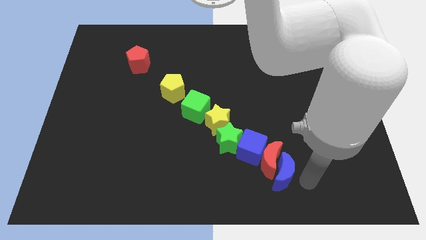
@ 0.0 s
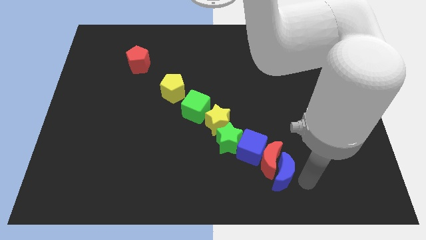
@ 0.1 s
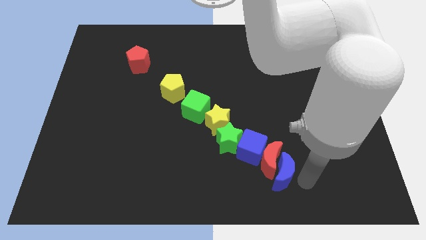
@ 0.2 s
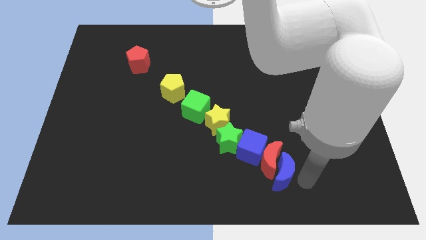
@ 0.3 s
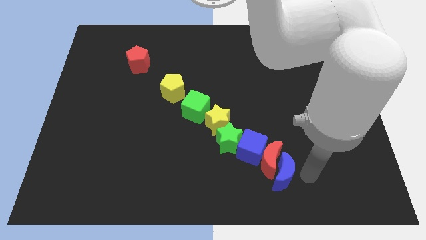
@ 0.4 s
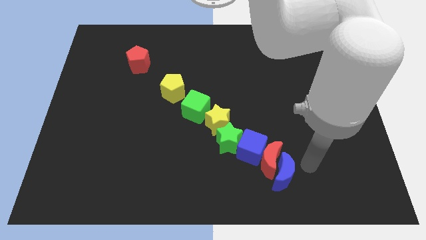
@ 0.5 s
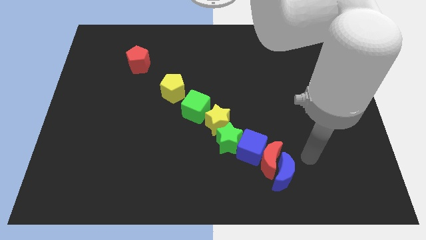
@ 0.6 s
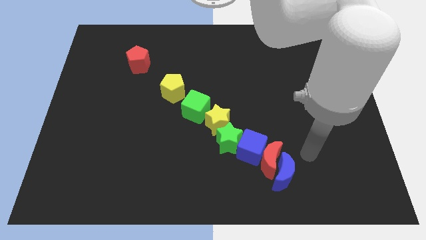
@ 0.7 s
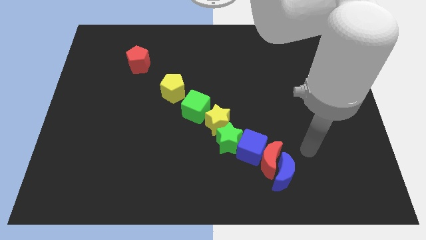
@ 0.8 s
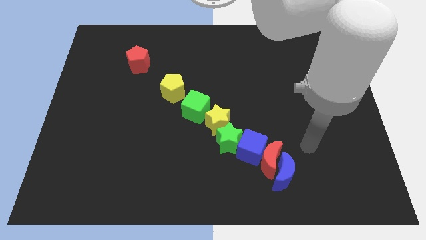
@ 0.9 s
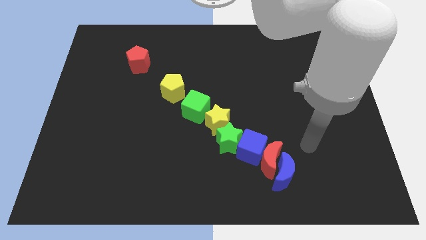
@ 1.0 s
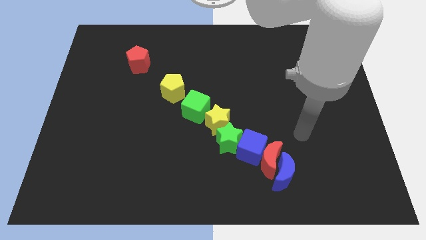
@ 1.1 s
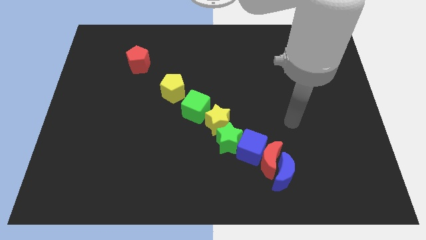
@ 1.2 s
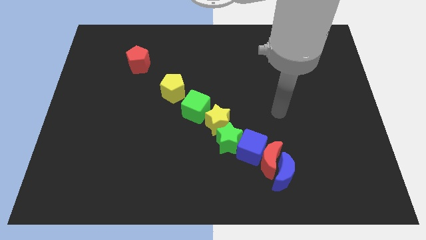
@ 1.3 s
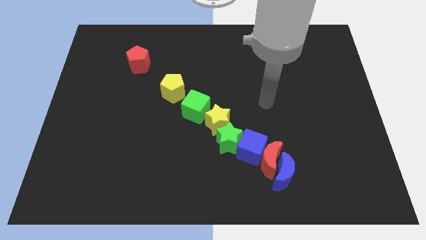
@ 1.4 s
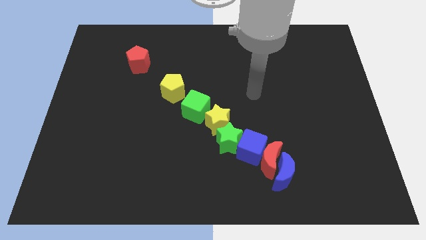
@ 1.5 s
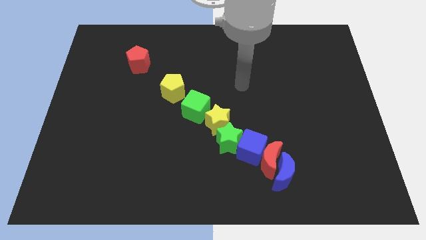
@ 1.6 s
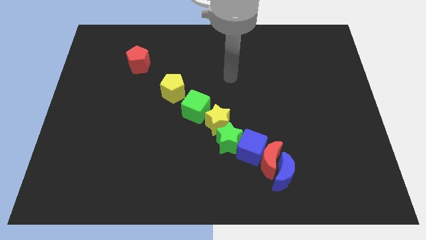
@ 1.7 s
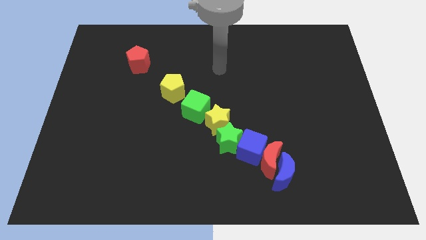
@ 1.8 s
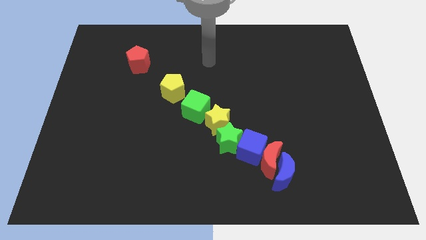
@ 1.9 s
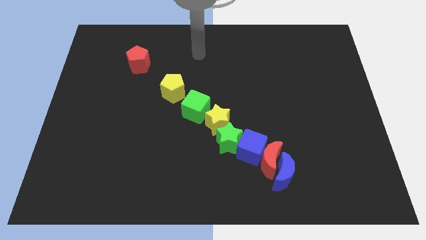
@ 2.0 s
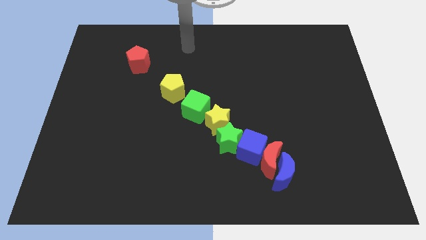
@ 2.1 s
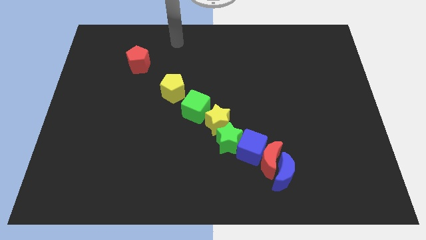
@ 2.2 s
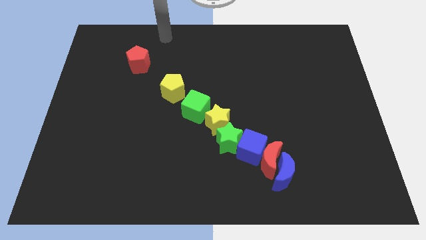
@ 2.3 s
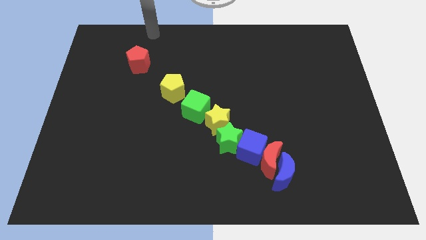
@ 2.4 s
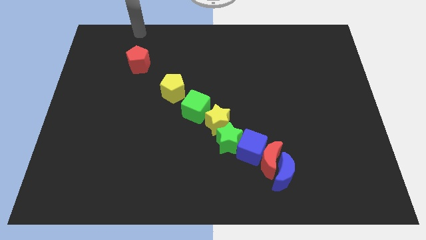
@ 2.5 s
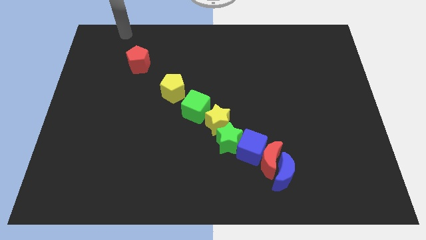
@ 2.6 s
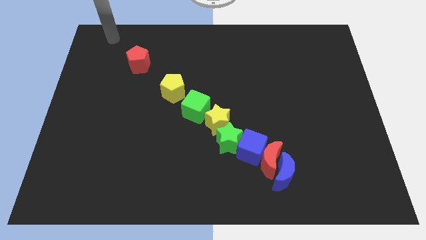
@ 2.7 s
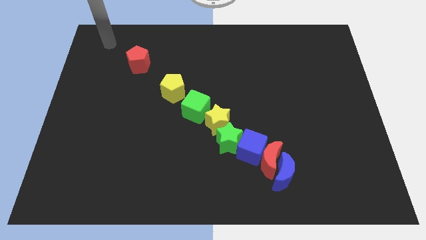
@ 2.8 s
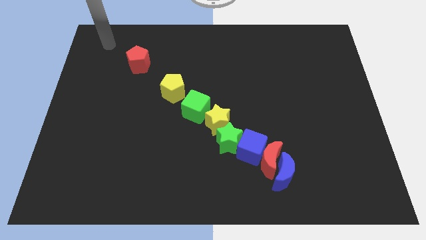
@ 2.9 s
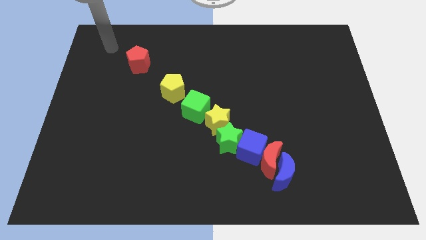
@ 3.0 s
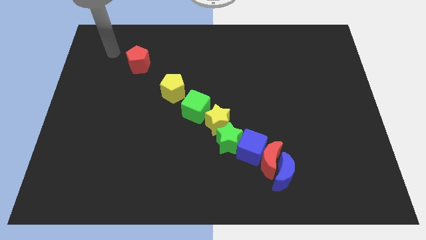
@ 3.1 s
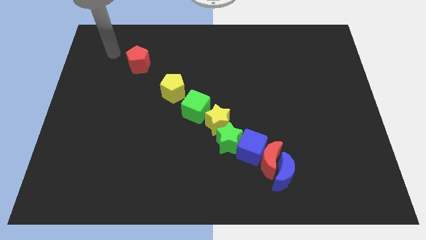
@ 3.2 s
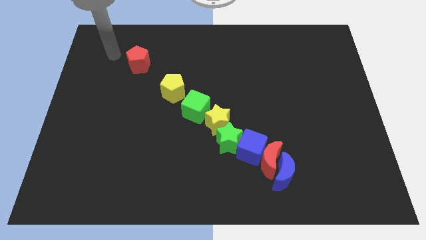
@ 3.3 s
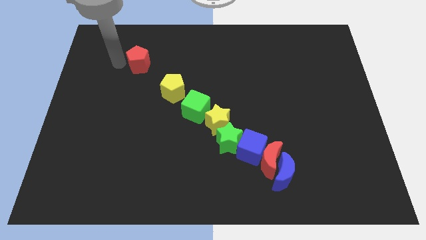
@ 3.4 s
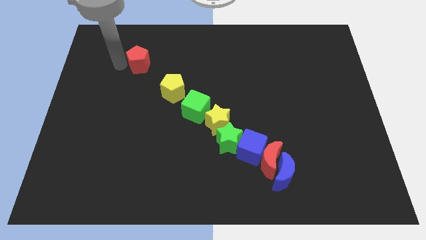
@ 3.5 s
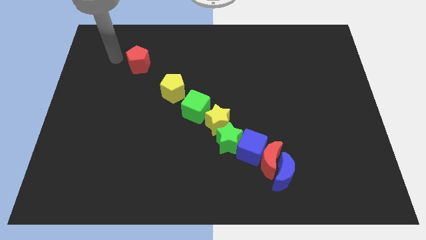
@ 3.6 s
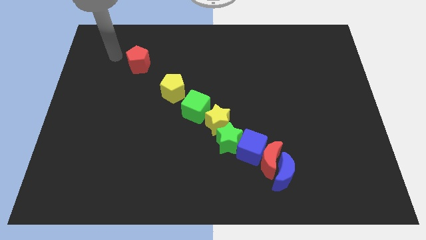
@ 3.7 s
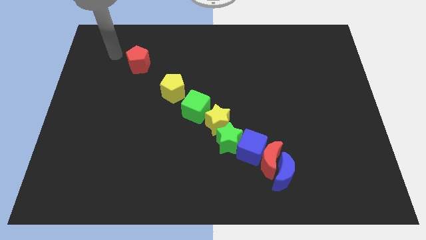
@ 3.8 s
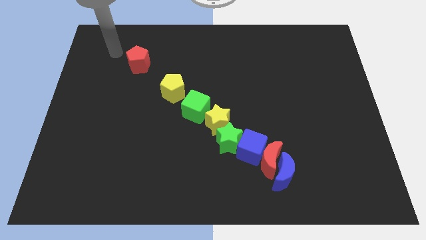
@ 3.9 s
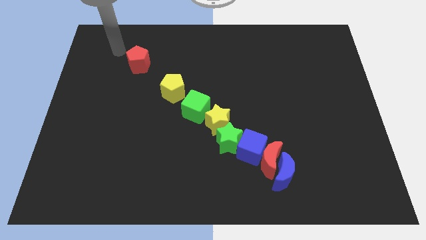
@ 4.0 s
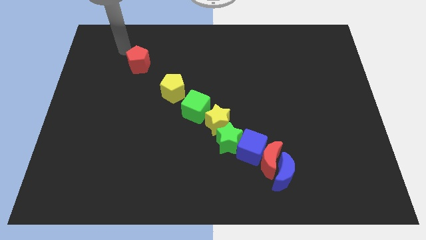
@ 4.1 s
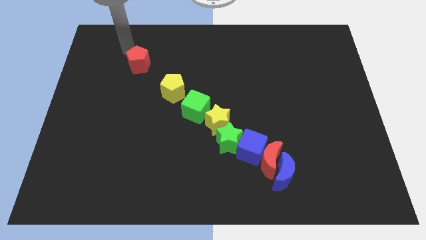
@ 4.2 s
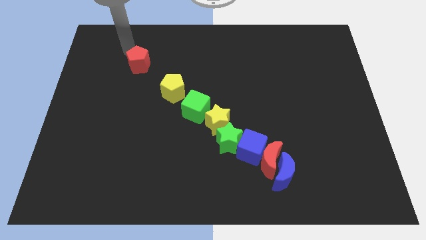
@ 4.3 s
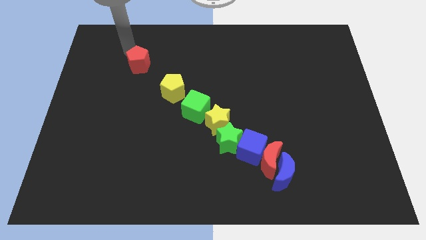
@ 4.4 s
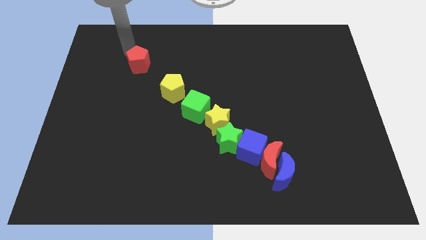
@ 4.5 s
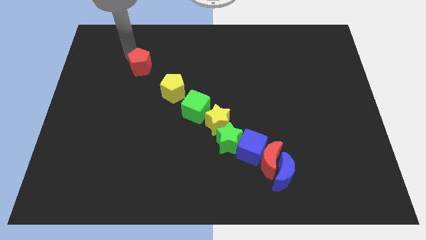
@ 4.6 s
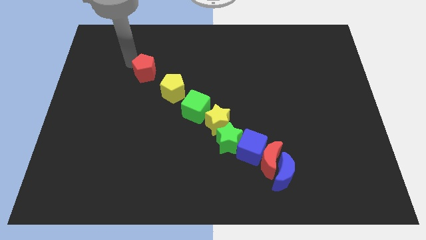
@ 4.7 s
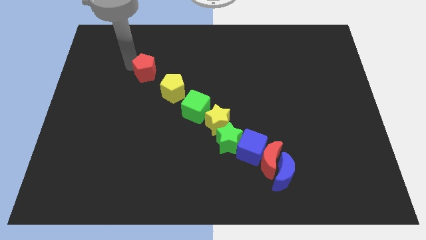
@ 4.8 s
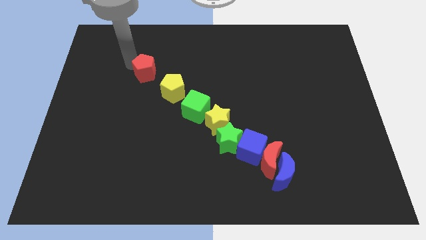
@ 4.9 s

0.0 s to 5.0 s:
move the arm towards the red pentagon

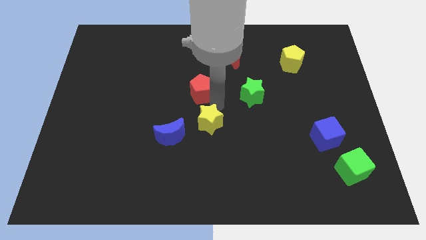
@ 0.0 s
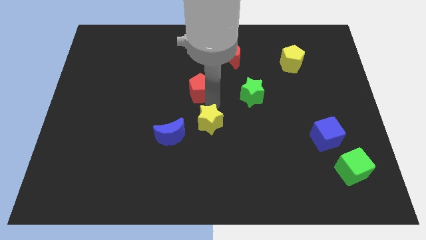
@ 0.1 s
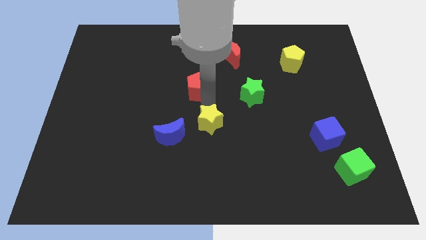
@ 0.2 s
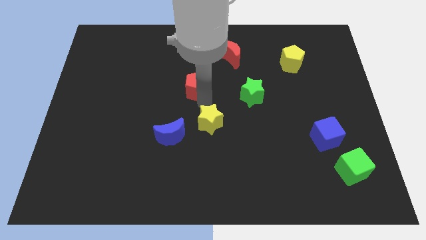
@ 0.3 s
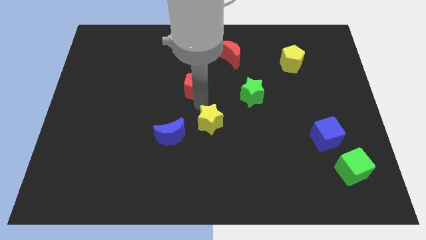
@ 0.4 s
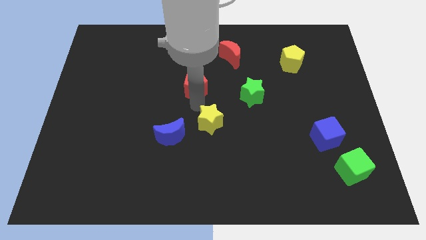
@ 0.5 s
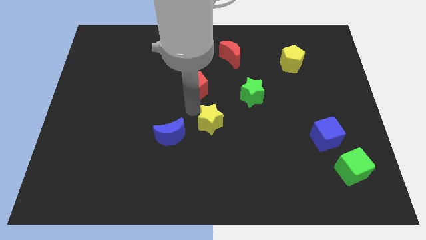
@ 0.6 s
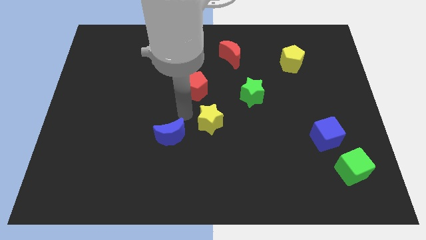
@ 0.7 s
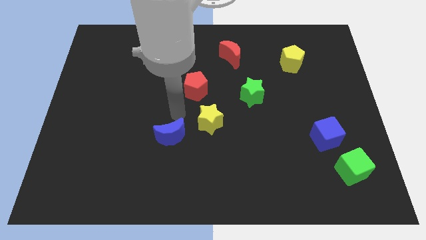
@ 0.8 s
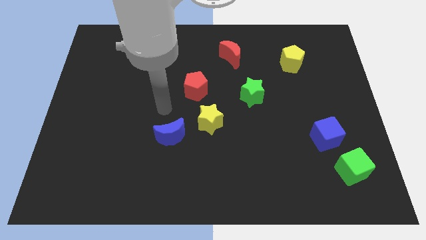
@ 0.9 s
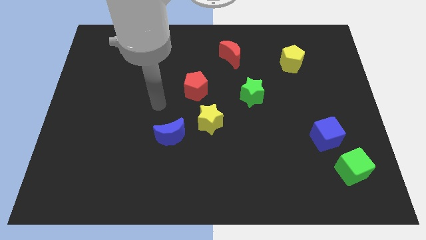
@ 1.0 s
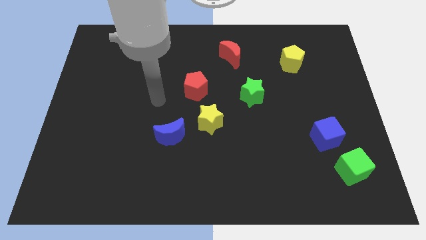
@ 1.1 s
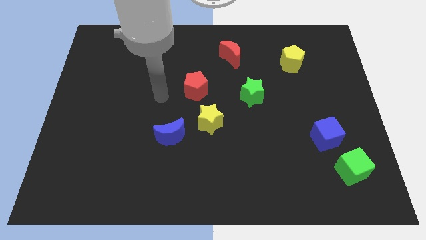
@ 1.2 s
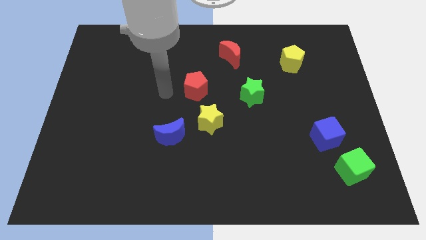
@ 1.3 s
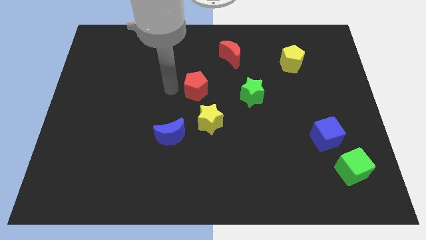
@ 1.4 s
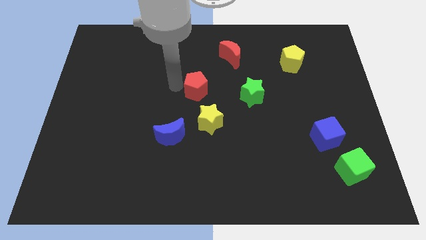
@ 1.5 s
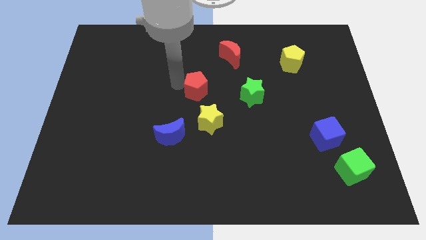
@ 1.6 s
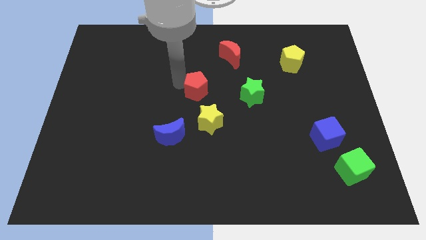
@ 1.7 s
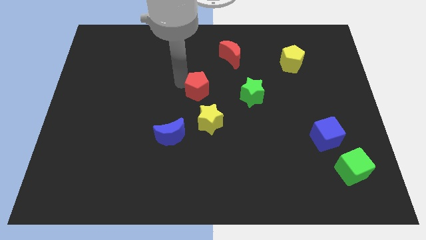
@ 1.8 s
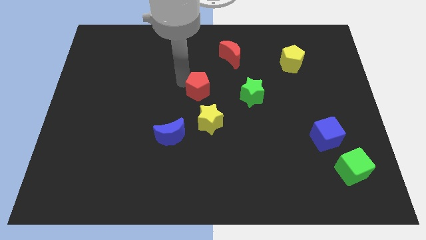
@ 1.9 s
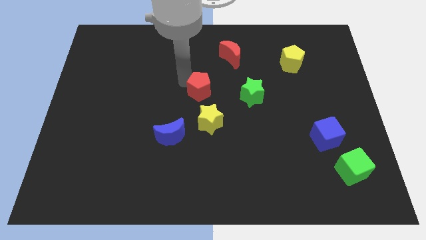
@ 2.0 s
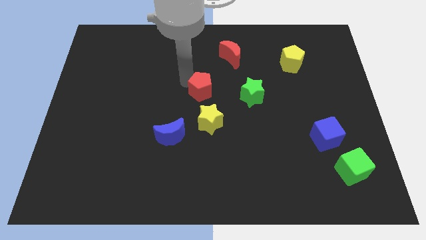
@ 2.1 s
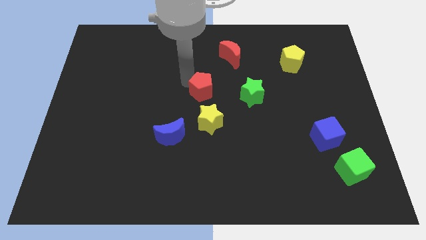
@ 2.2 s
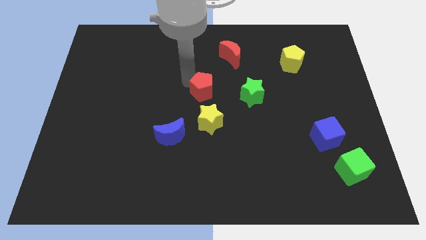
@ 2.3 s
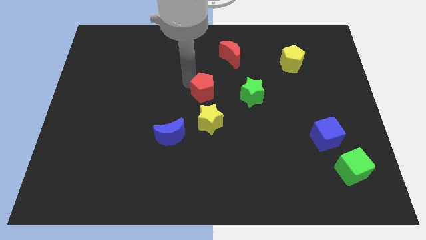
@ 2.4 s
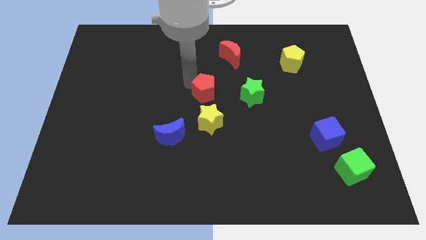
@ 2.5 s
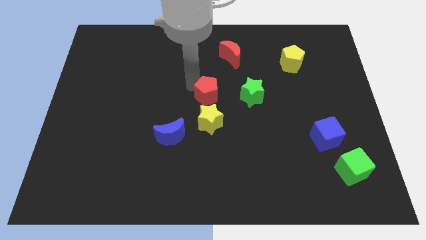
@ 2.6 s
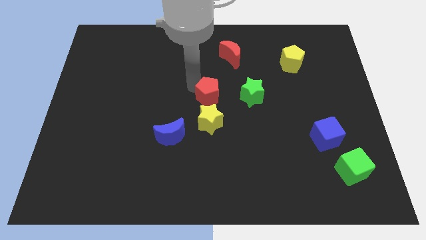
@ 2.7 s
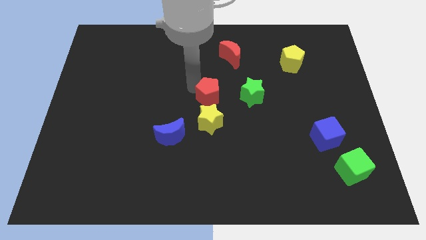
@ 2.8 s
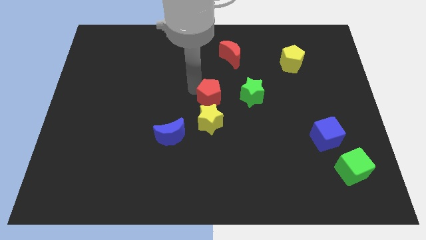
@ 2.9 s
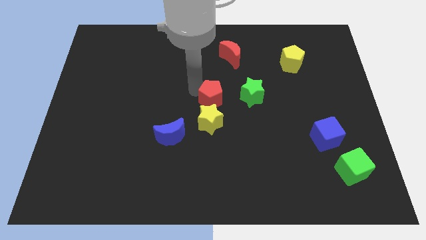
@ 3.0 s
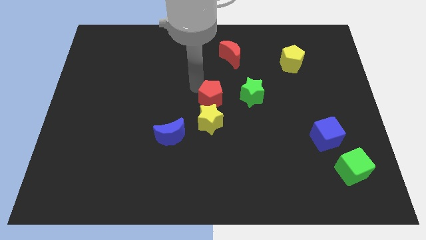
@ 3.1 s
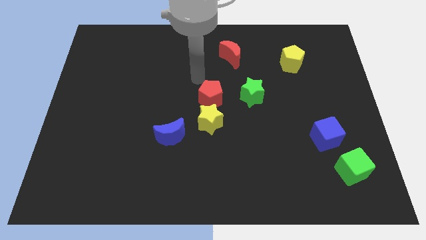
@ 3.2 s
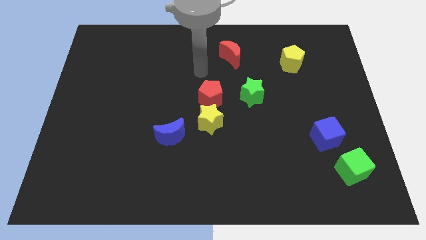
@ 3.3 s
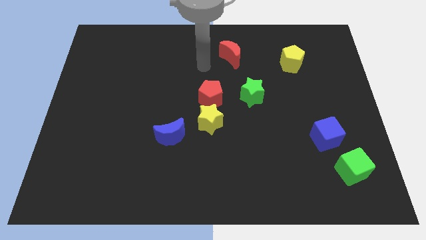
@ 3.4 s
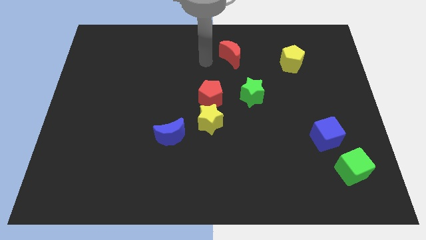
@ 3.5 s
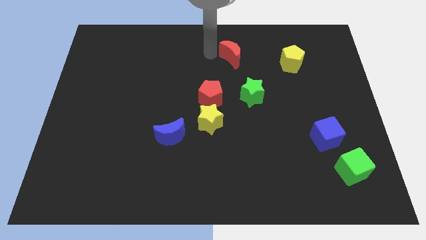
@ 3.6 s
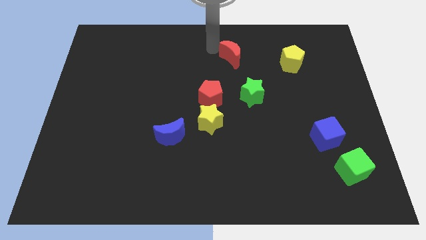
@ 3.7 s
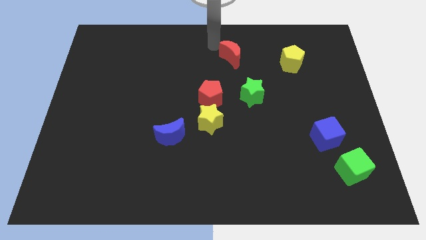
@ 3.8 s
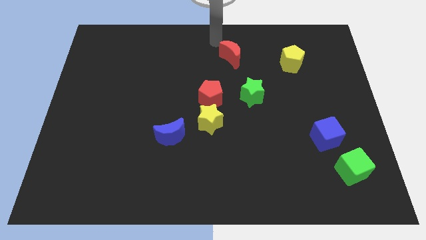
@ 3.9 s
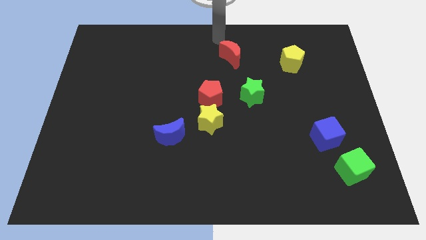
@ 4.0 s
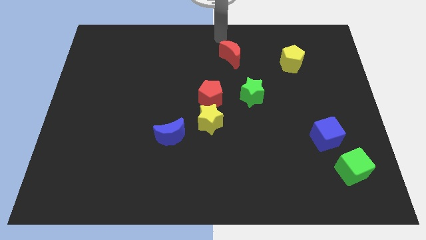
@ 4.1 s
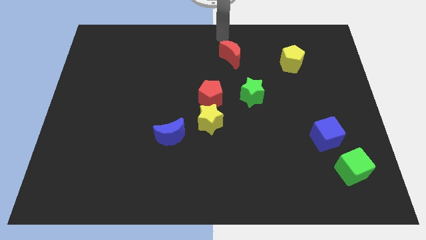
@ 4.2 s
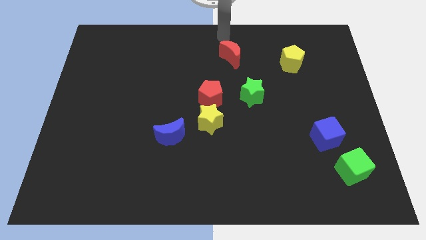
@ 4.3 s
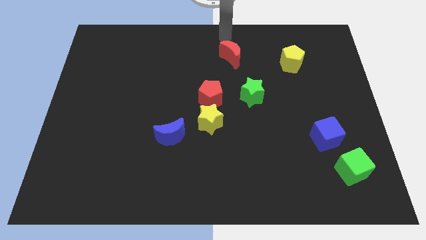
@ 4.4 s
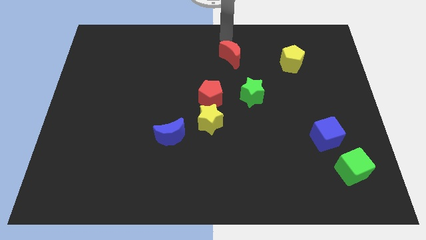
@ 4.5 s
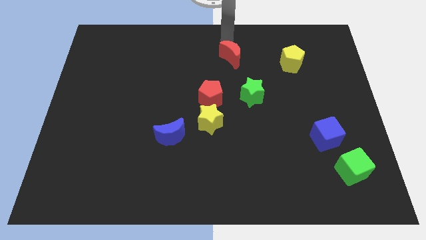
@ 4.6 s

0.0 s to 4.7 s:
place the red crescent above the yellow star
